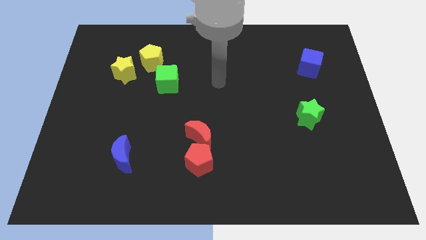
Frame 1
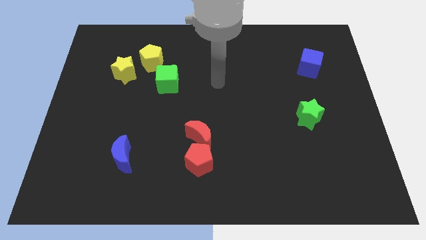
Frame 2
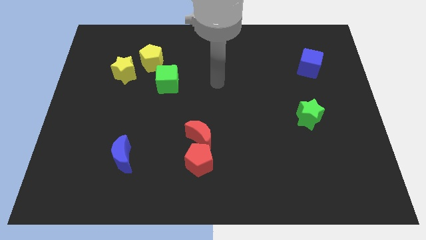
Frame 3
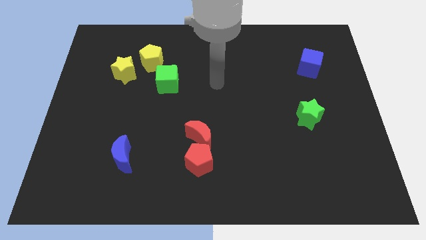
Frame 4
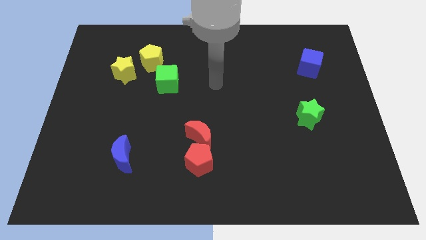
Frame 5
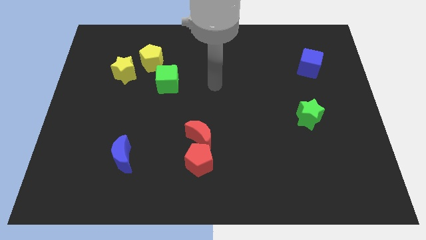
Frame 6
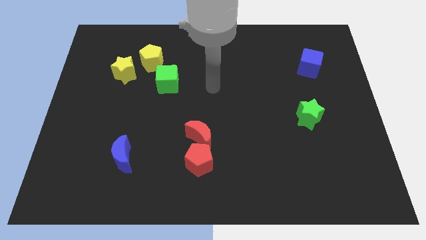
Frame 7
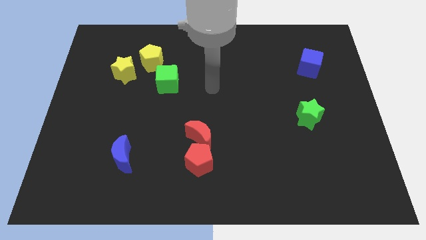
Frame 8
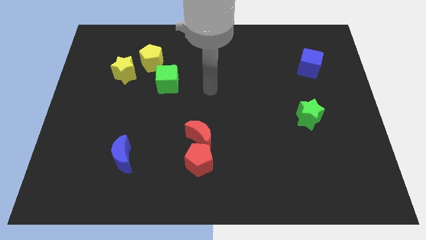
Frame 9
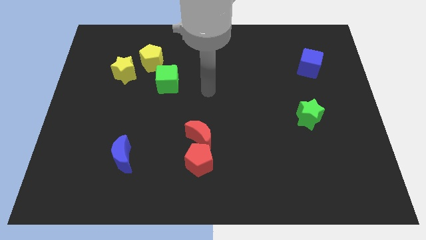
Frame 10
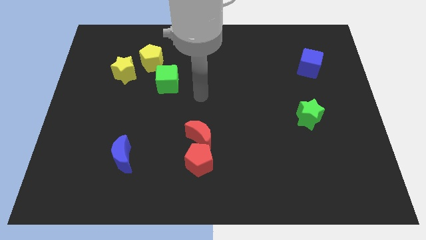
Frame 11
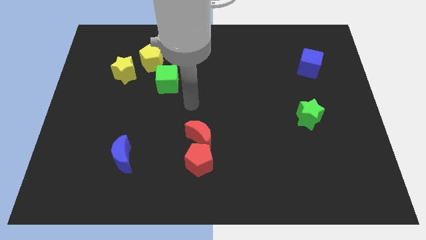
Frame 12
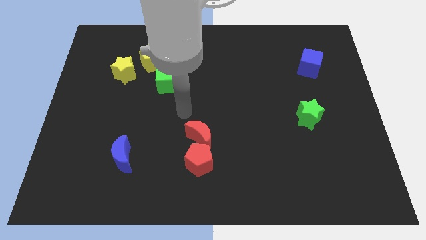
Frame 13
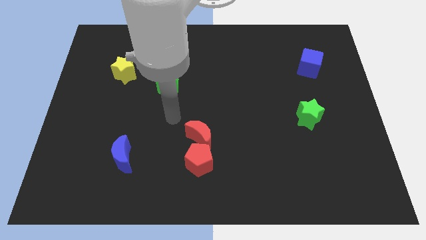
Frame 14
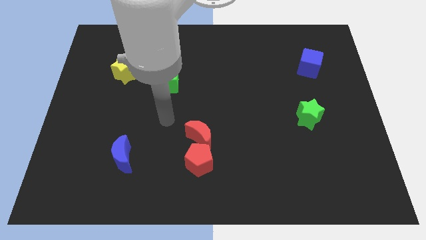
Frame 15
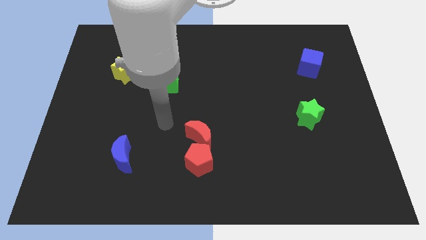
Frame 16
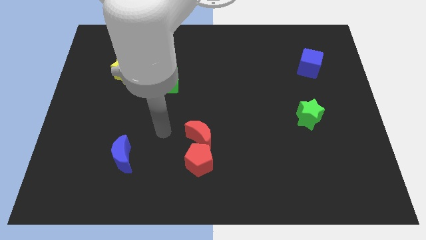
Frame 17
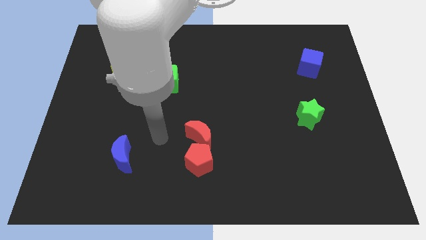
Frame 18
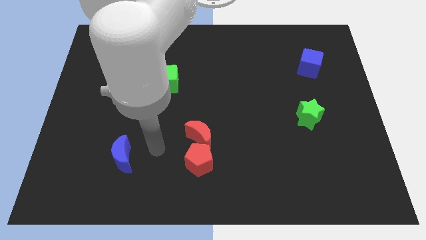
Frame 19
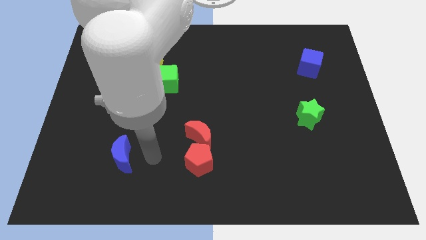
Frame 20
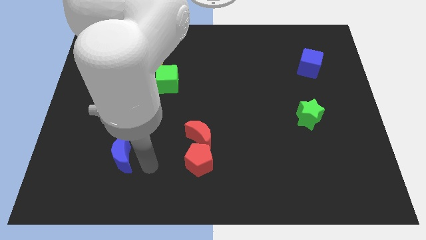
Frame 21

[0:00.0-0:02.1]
push the arm in between the red pentagon and the blue moon

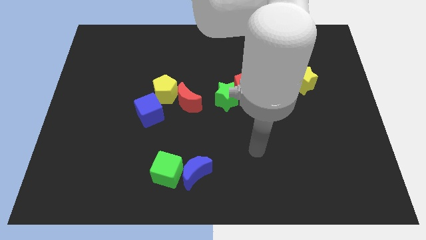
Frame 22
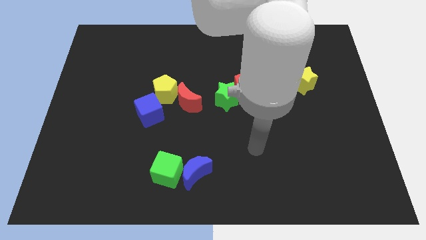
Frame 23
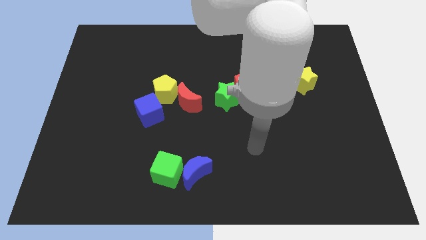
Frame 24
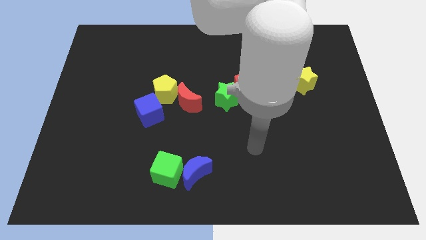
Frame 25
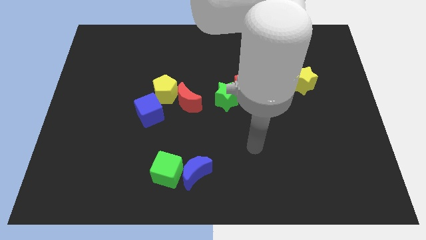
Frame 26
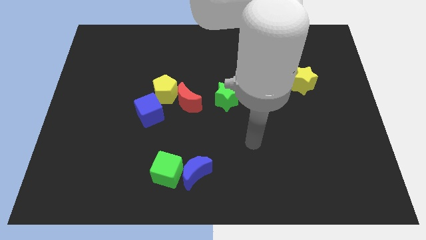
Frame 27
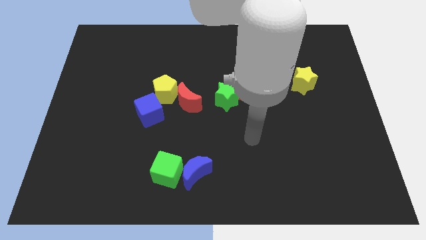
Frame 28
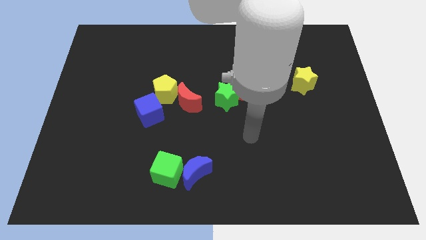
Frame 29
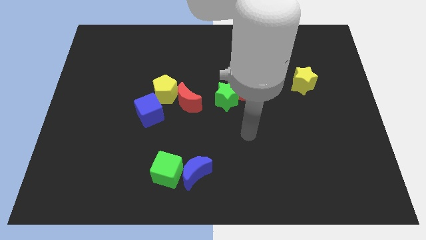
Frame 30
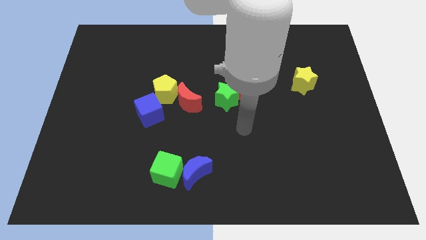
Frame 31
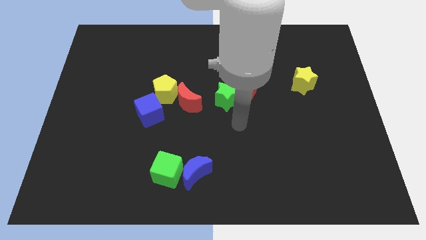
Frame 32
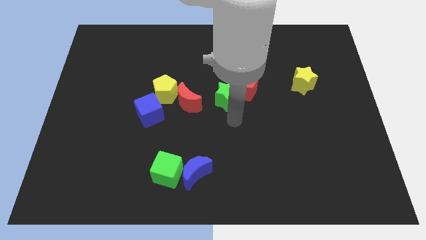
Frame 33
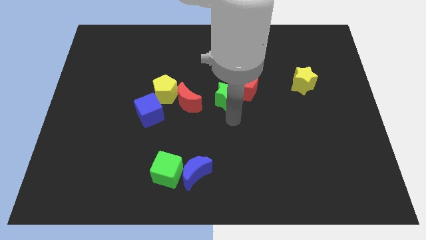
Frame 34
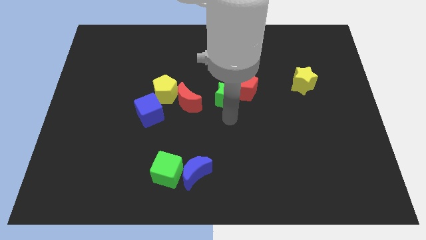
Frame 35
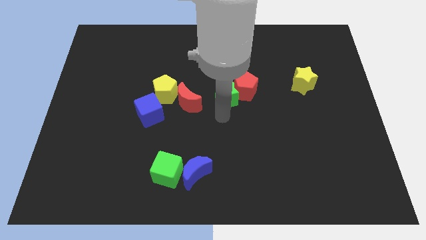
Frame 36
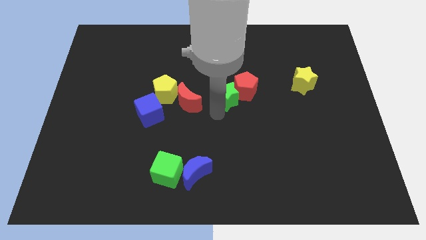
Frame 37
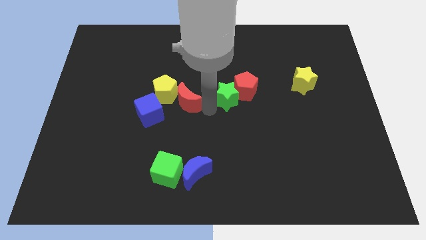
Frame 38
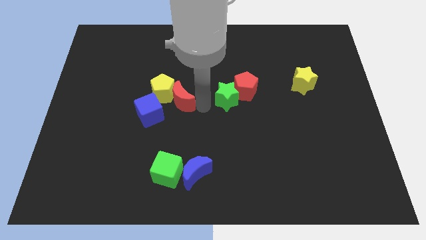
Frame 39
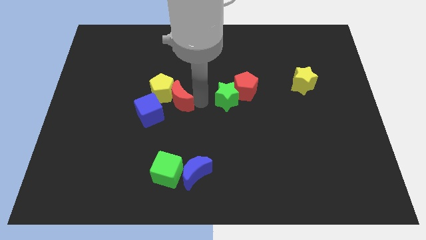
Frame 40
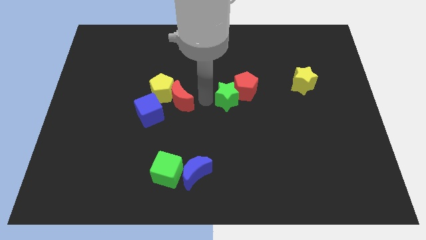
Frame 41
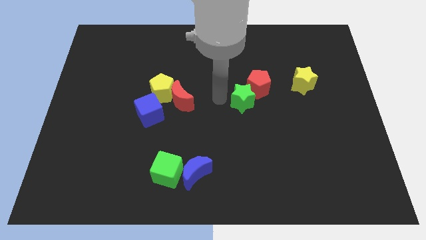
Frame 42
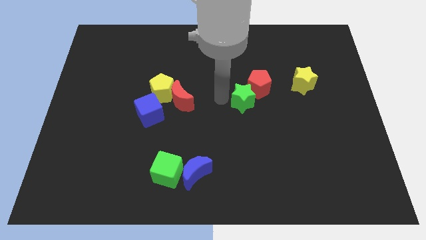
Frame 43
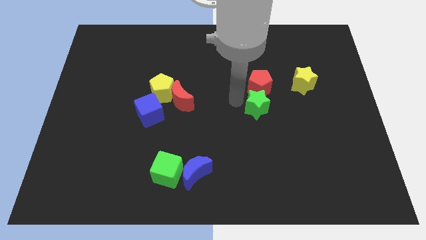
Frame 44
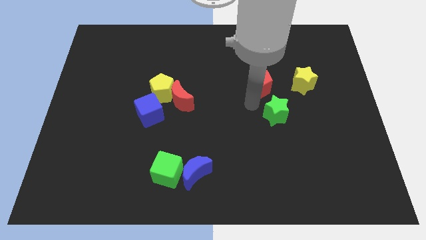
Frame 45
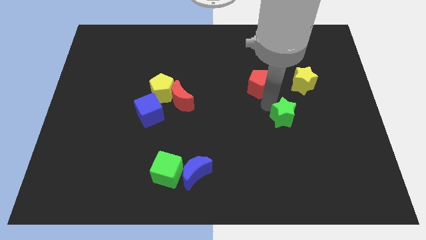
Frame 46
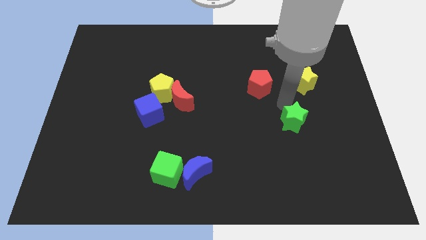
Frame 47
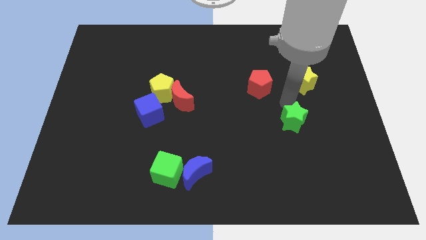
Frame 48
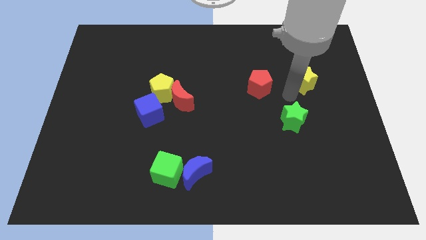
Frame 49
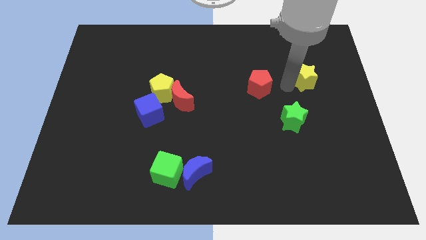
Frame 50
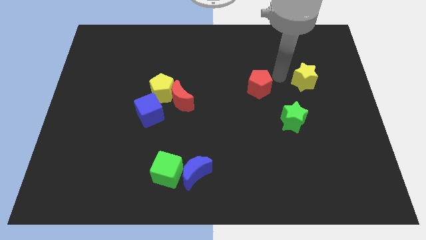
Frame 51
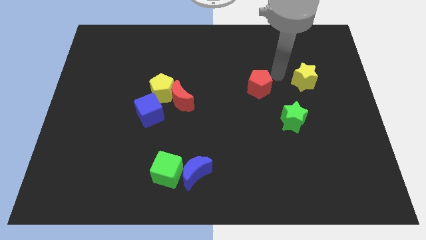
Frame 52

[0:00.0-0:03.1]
make a triangle out of red pentagongreen and the yellow star

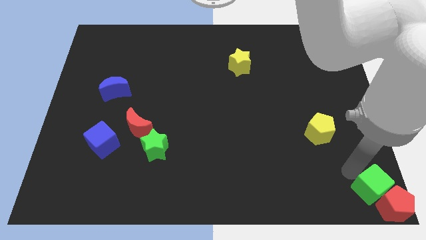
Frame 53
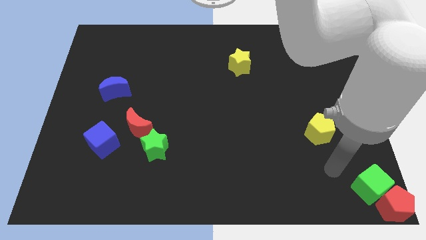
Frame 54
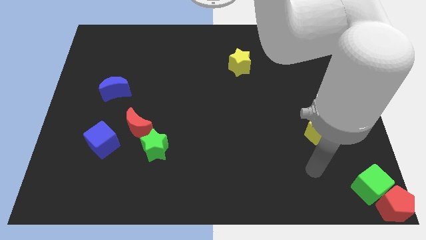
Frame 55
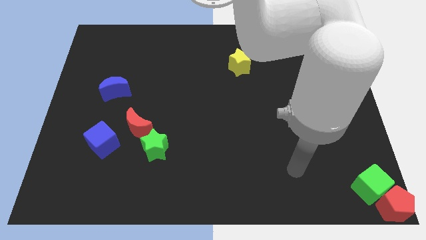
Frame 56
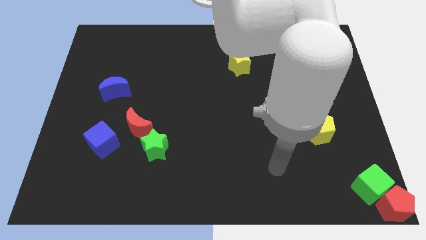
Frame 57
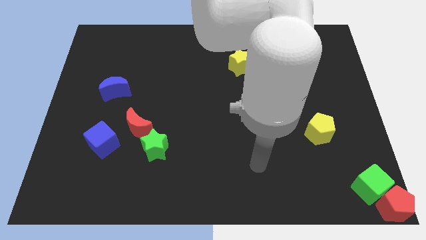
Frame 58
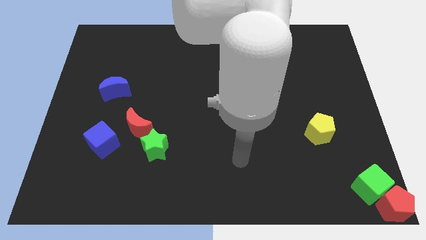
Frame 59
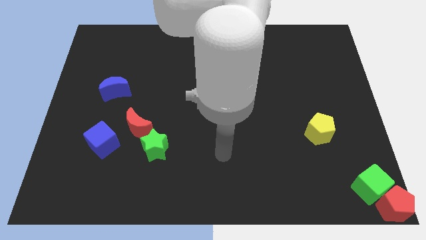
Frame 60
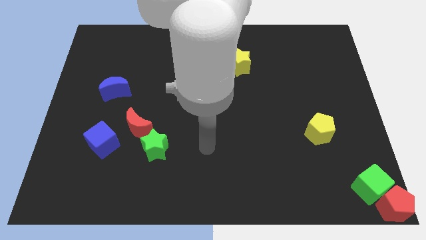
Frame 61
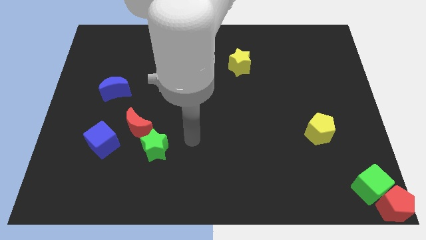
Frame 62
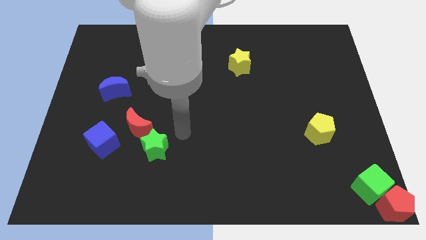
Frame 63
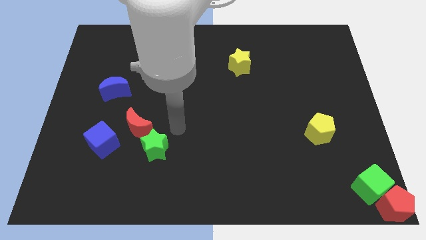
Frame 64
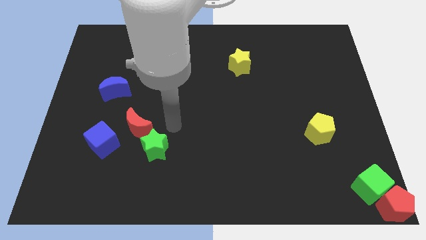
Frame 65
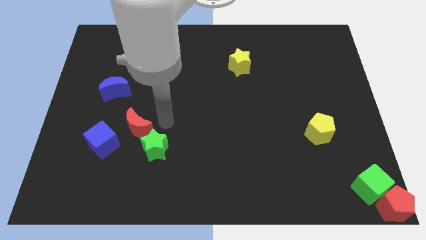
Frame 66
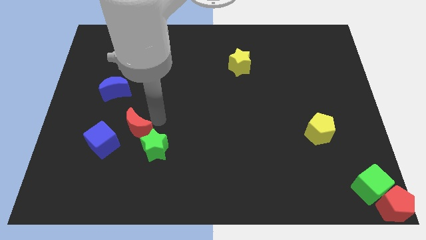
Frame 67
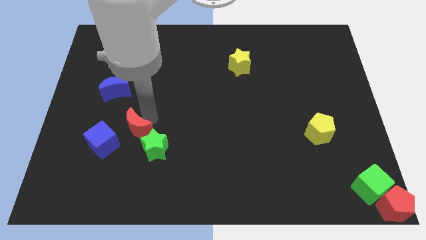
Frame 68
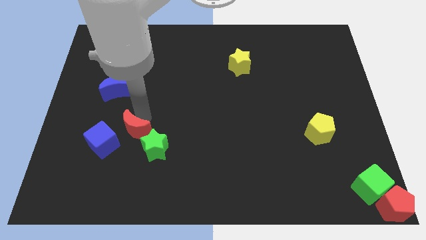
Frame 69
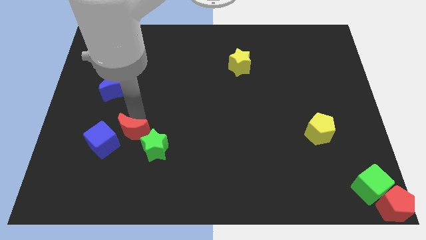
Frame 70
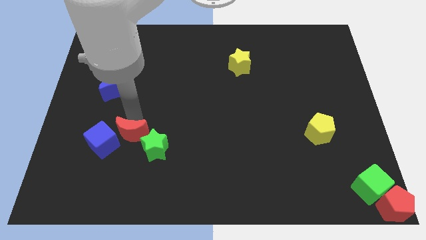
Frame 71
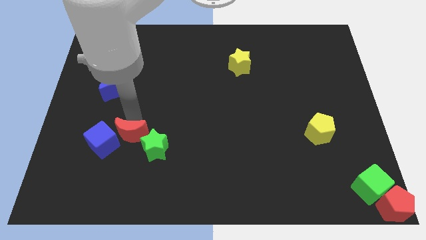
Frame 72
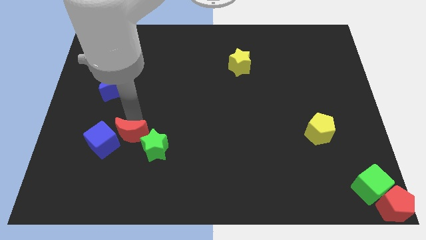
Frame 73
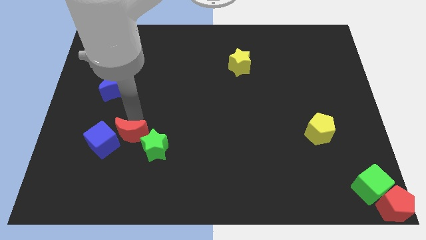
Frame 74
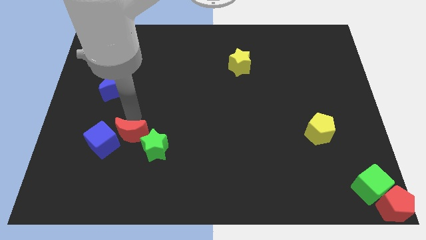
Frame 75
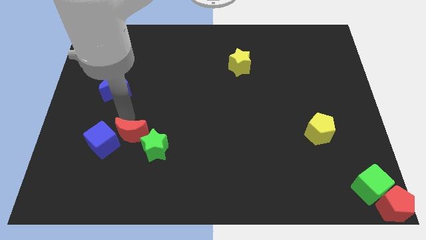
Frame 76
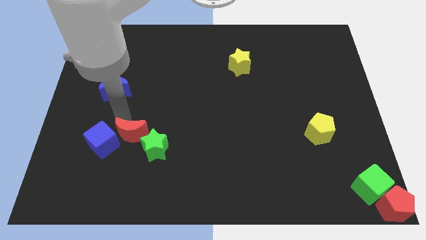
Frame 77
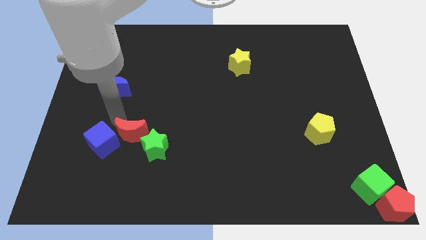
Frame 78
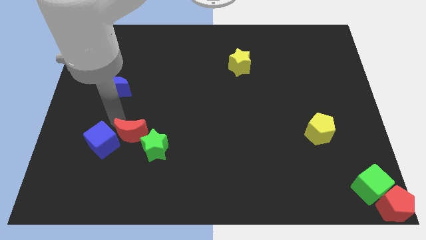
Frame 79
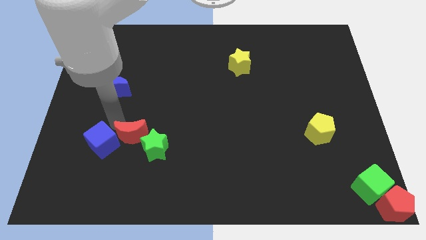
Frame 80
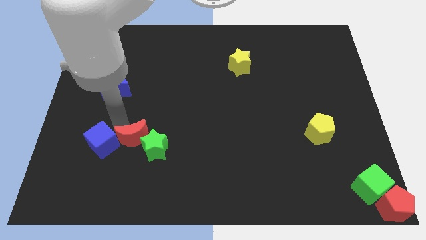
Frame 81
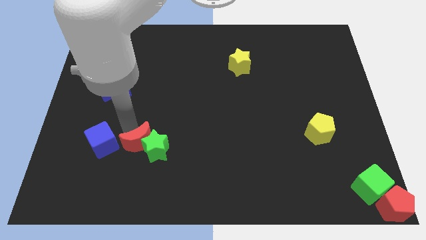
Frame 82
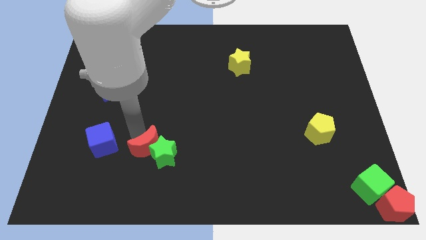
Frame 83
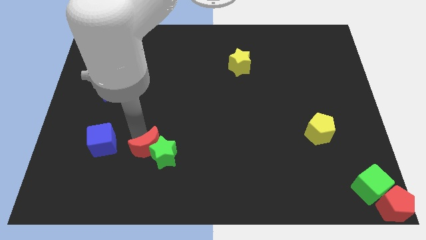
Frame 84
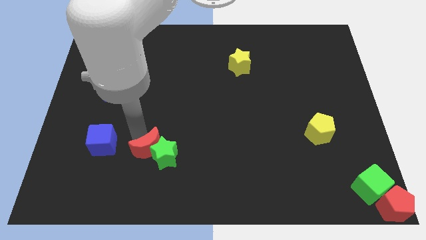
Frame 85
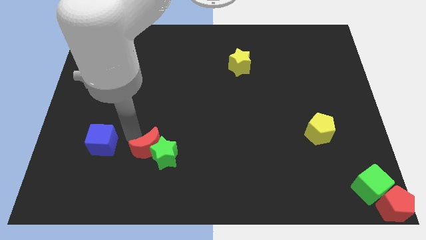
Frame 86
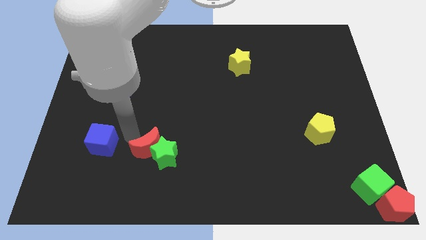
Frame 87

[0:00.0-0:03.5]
move your arm towards the red moon

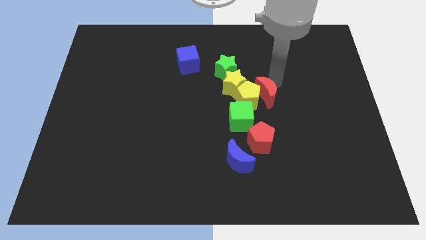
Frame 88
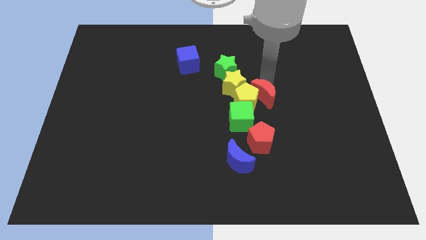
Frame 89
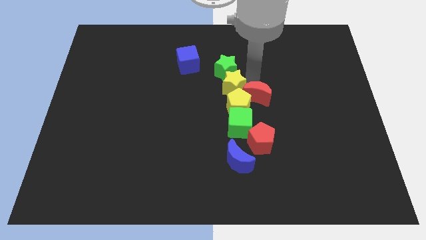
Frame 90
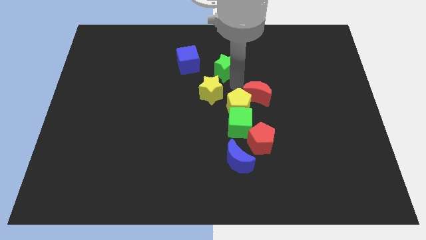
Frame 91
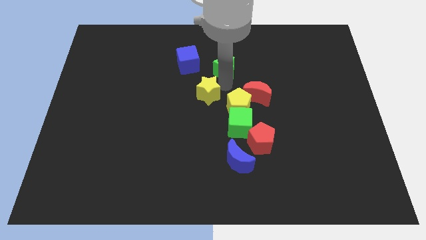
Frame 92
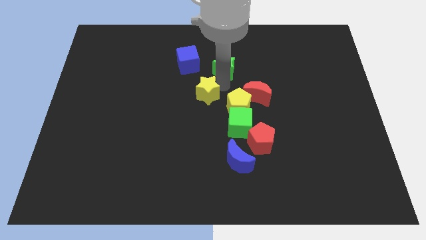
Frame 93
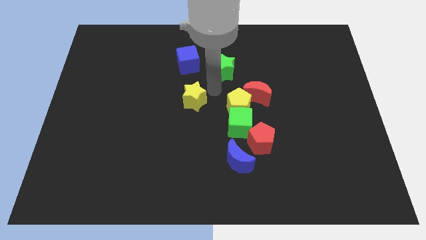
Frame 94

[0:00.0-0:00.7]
separate the yellow star from the green star
